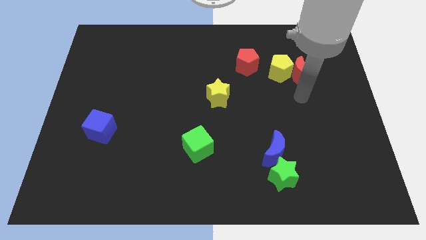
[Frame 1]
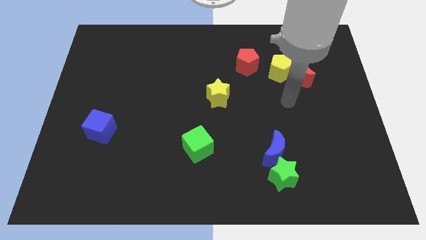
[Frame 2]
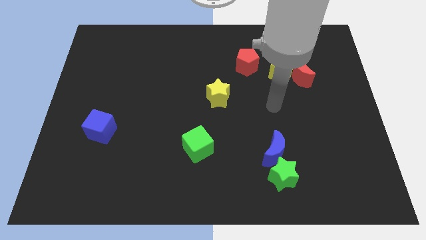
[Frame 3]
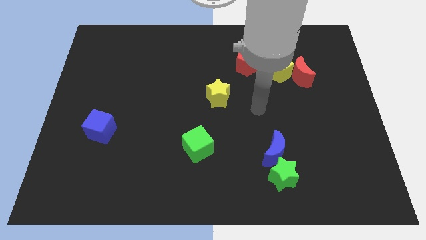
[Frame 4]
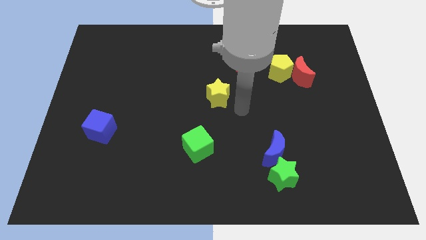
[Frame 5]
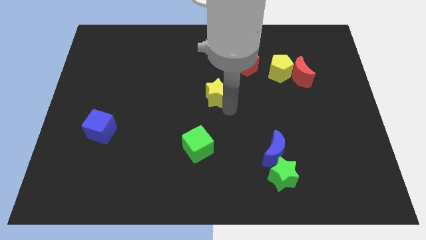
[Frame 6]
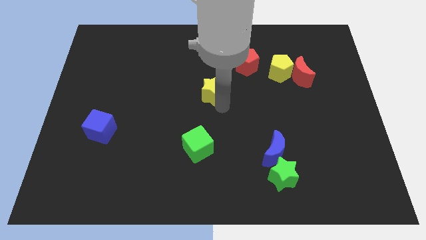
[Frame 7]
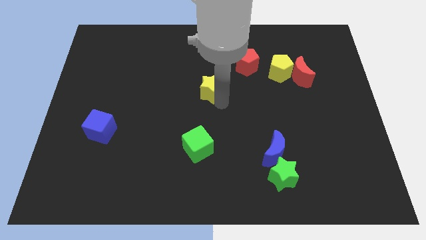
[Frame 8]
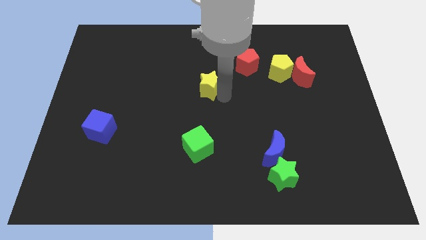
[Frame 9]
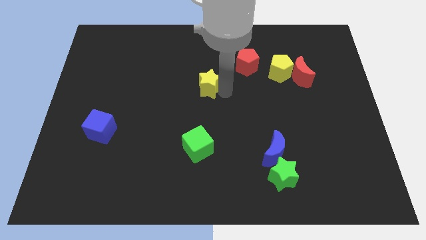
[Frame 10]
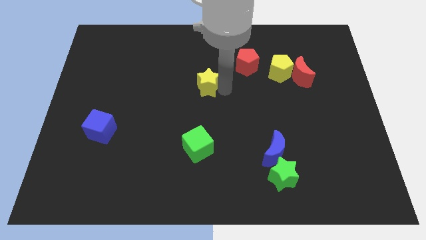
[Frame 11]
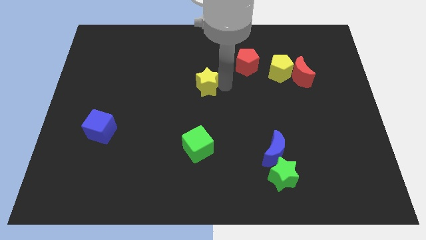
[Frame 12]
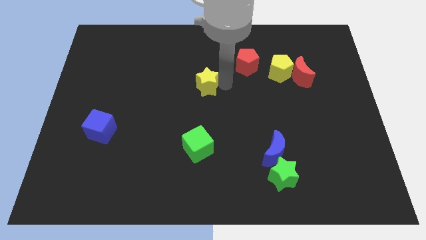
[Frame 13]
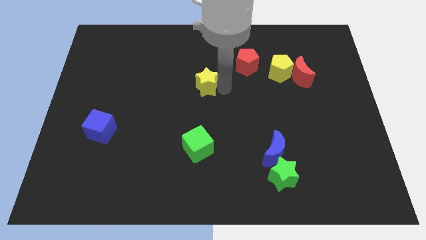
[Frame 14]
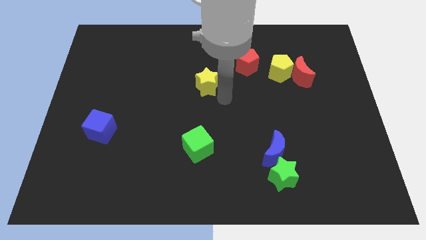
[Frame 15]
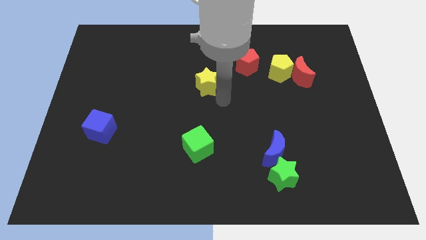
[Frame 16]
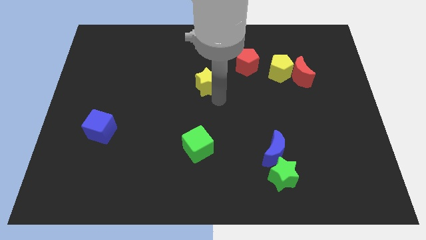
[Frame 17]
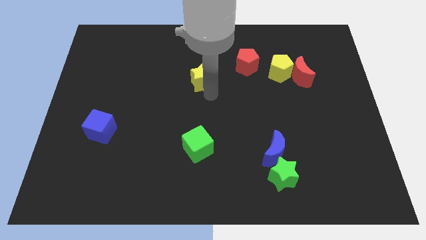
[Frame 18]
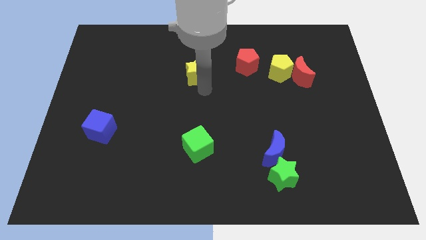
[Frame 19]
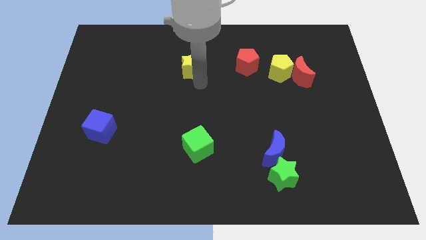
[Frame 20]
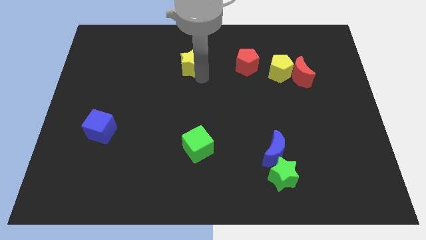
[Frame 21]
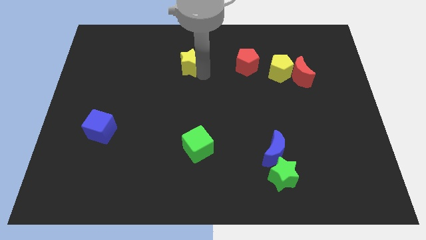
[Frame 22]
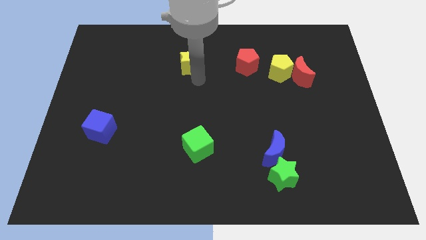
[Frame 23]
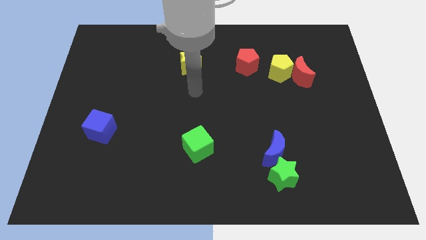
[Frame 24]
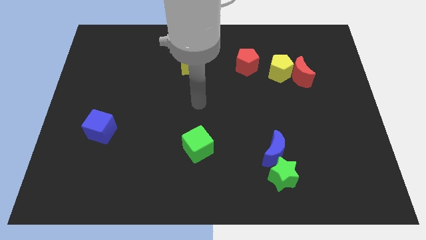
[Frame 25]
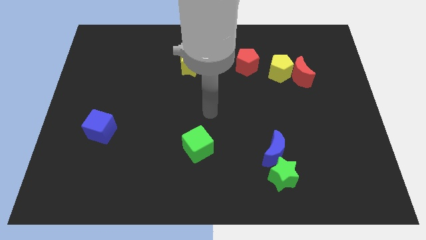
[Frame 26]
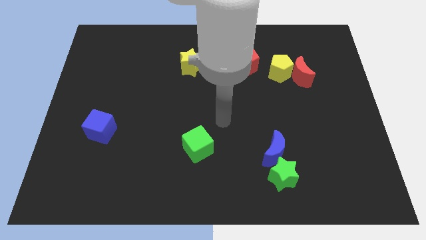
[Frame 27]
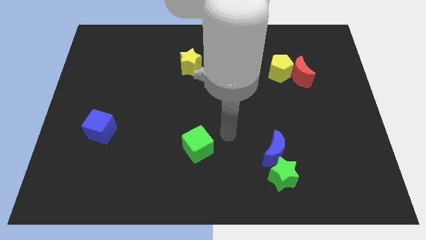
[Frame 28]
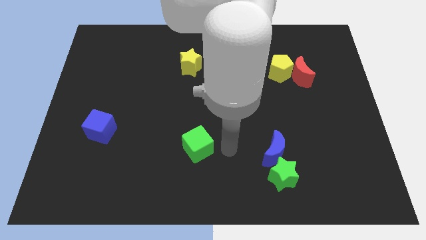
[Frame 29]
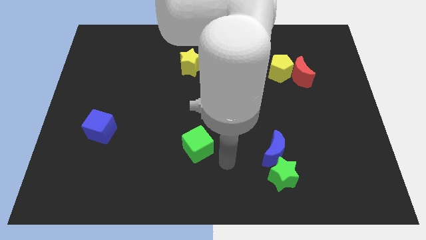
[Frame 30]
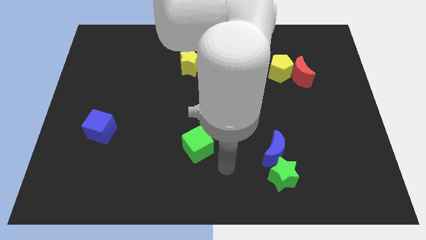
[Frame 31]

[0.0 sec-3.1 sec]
place the yellow star to the left of red pentagon

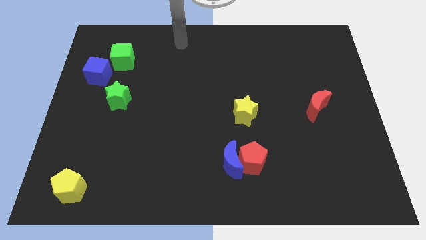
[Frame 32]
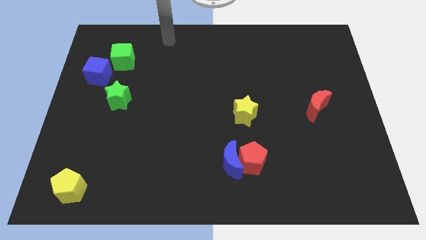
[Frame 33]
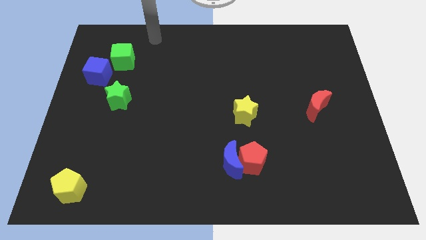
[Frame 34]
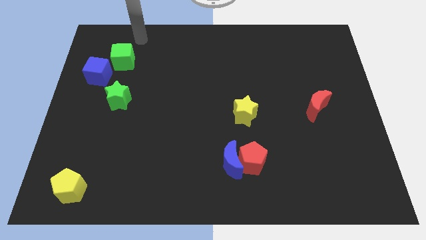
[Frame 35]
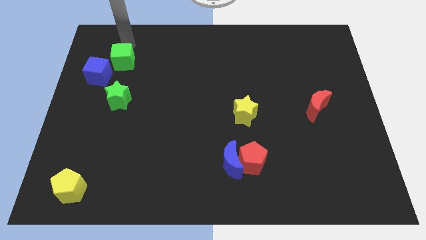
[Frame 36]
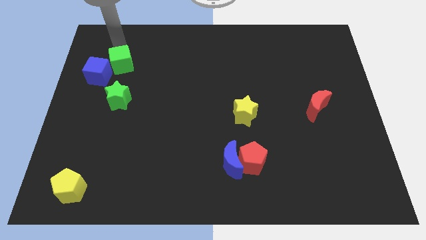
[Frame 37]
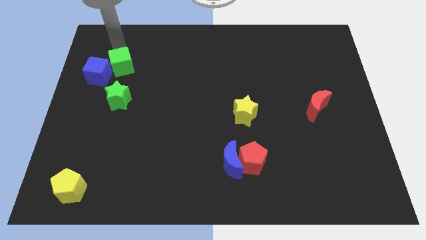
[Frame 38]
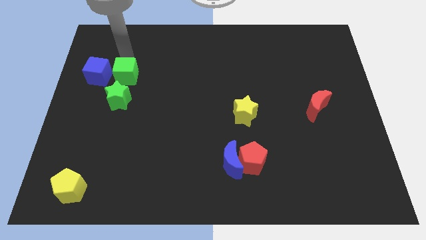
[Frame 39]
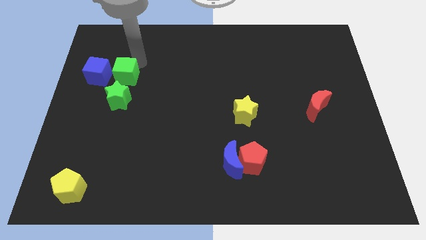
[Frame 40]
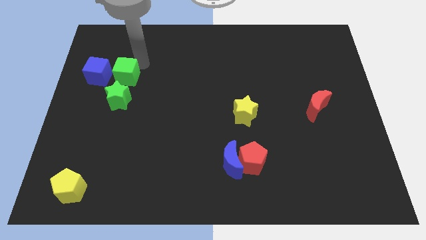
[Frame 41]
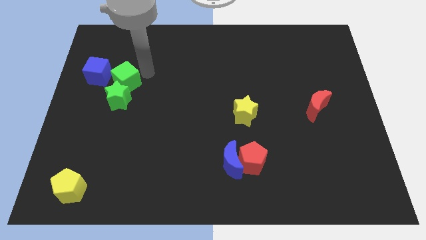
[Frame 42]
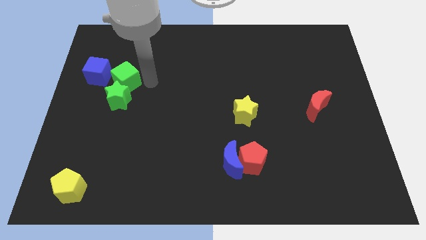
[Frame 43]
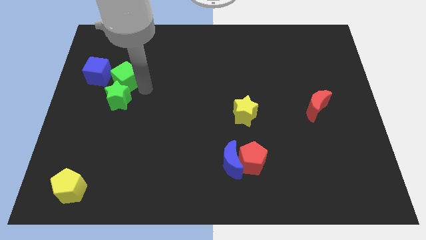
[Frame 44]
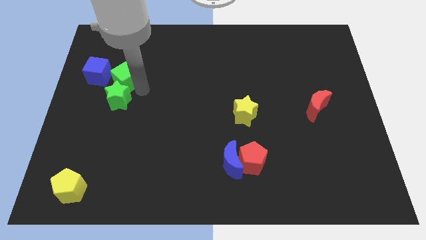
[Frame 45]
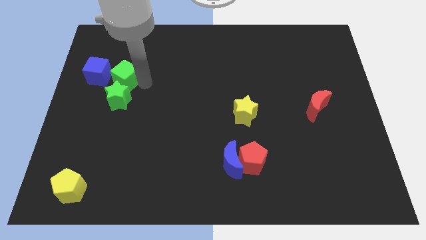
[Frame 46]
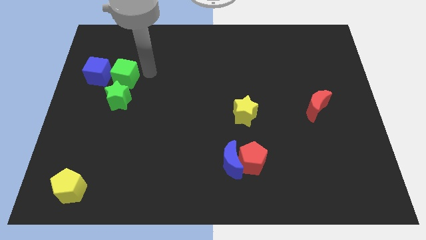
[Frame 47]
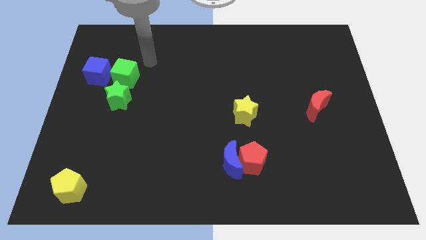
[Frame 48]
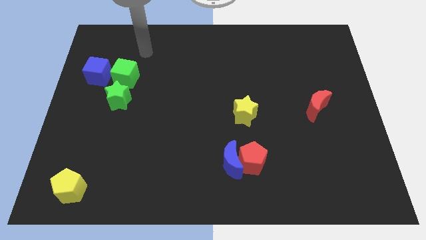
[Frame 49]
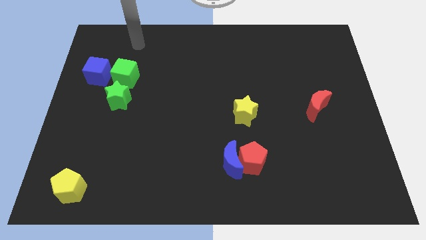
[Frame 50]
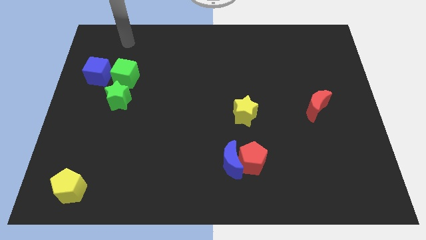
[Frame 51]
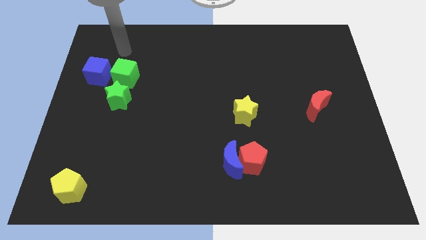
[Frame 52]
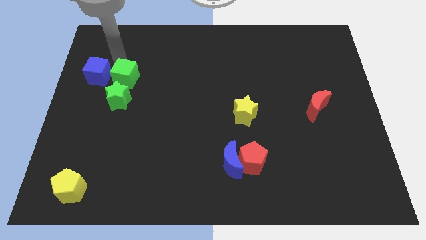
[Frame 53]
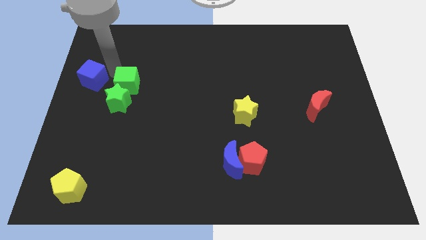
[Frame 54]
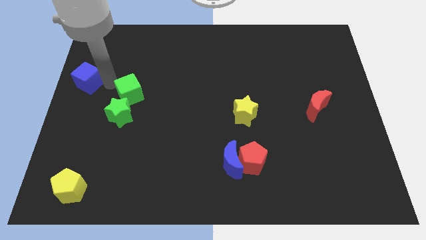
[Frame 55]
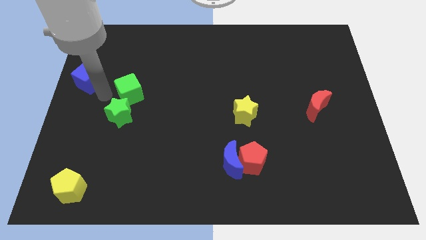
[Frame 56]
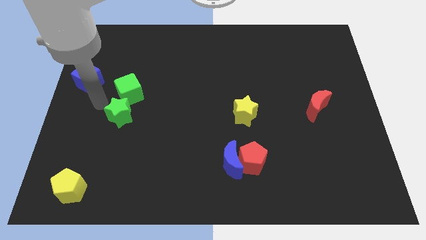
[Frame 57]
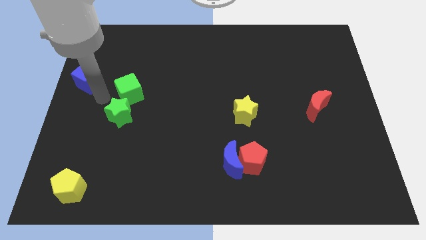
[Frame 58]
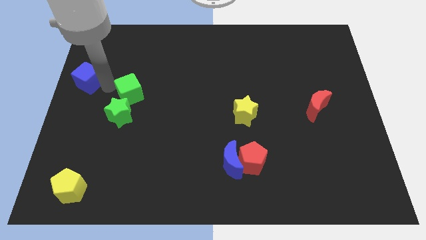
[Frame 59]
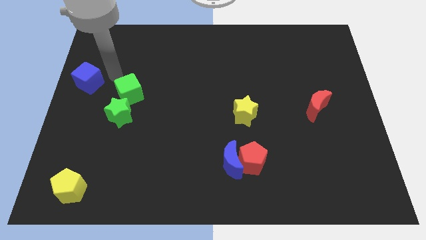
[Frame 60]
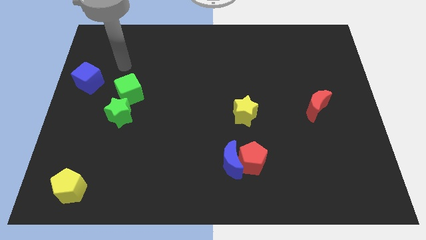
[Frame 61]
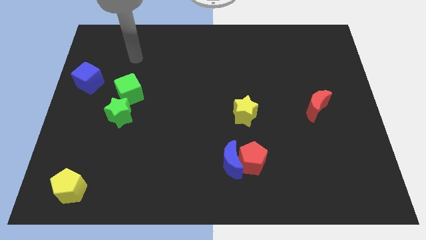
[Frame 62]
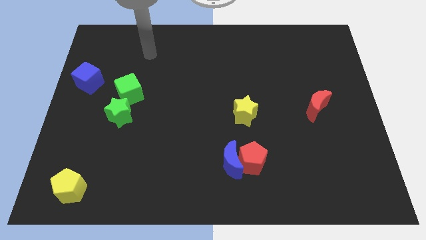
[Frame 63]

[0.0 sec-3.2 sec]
push the green blocks to the center left

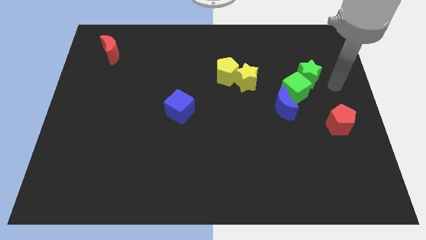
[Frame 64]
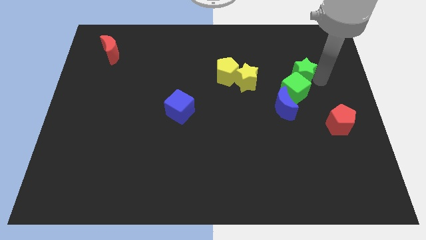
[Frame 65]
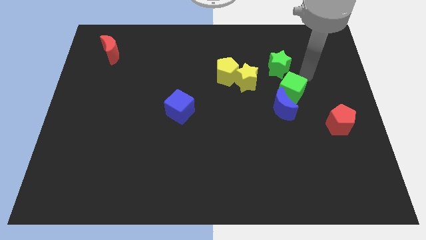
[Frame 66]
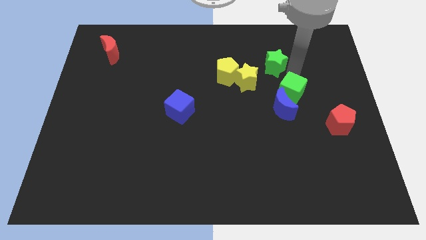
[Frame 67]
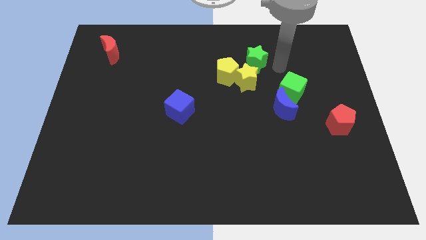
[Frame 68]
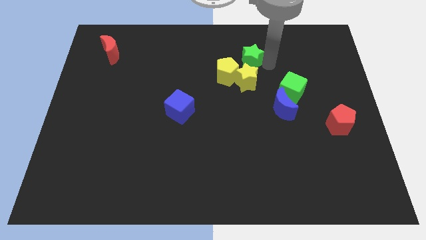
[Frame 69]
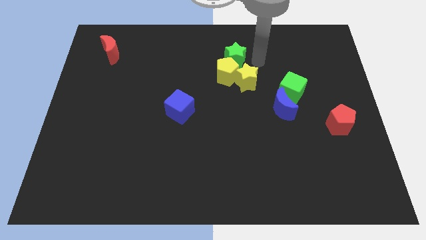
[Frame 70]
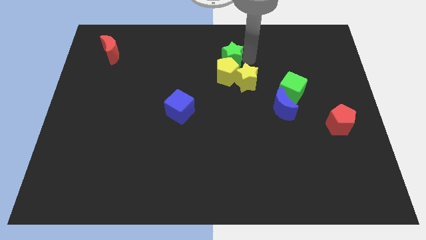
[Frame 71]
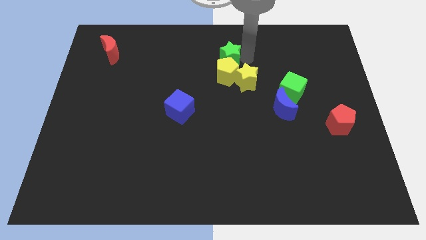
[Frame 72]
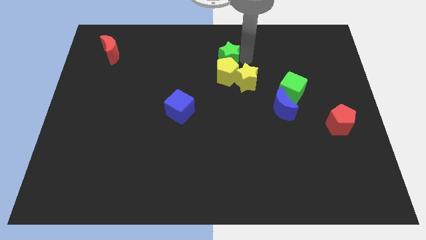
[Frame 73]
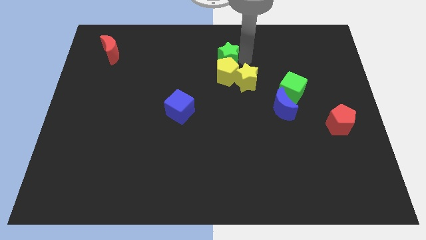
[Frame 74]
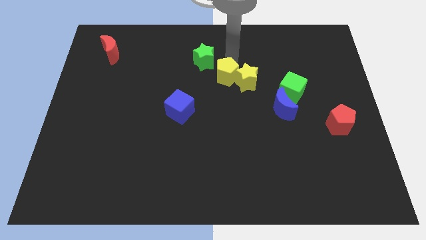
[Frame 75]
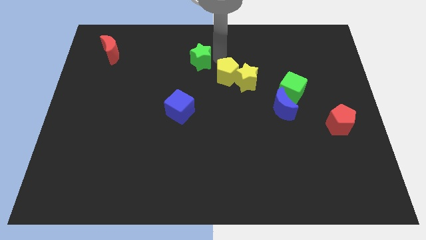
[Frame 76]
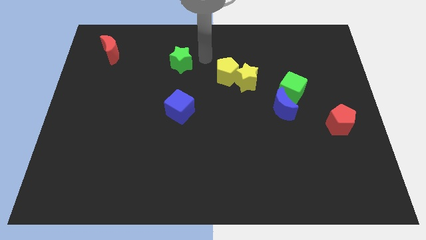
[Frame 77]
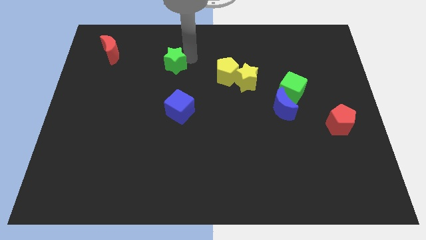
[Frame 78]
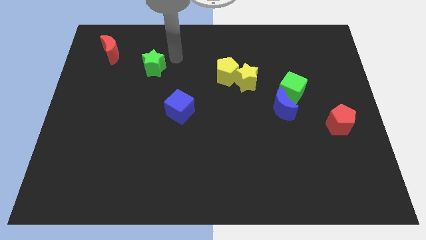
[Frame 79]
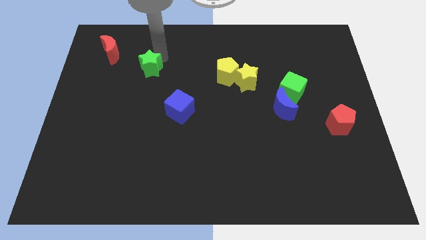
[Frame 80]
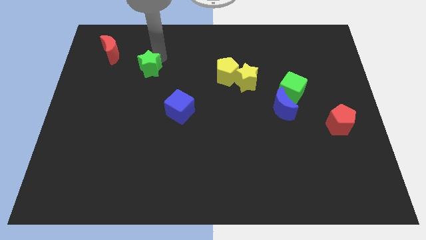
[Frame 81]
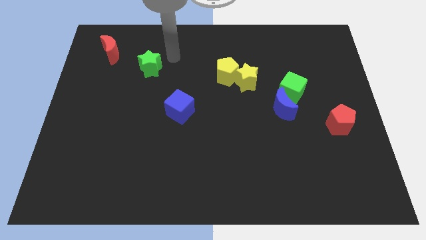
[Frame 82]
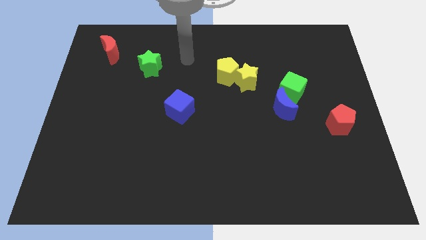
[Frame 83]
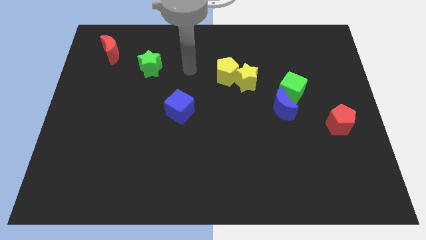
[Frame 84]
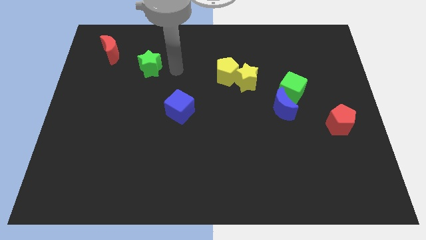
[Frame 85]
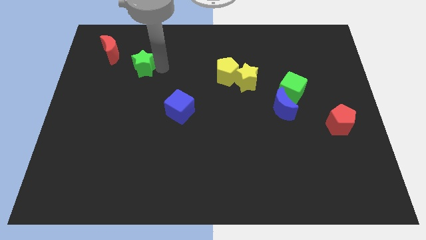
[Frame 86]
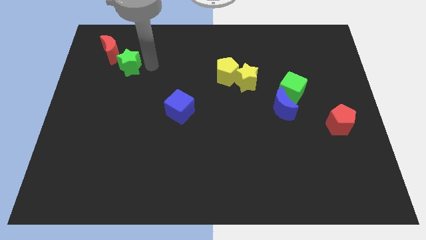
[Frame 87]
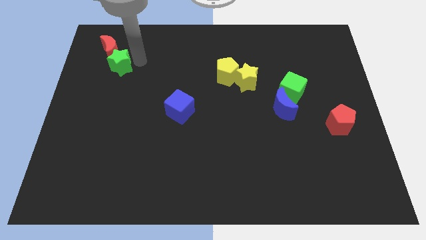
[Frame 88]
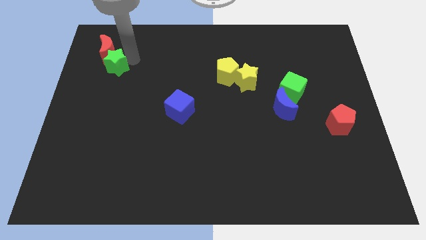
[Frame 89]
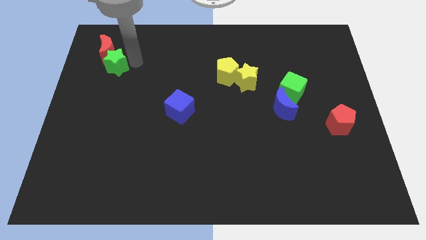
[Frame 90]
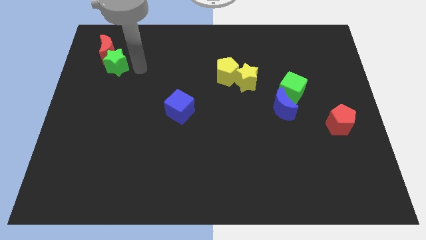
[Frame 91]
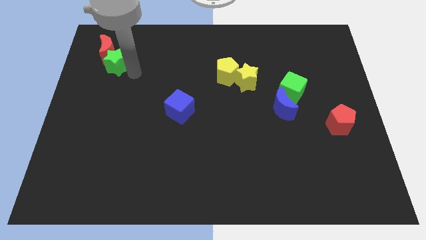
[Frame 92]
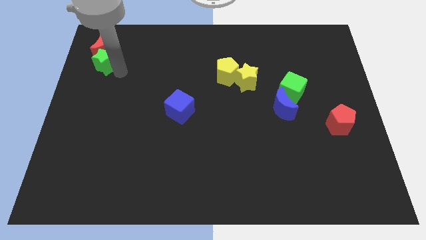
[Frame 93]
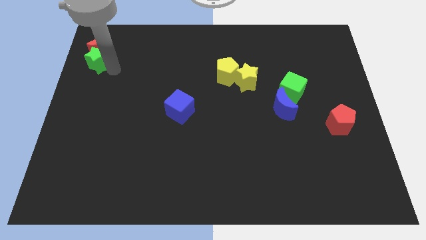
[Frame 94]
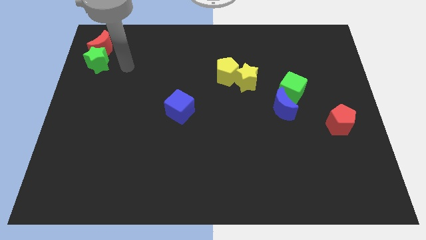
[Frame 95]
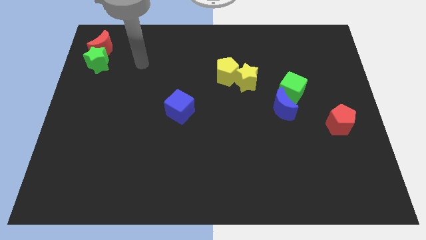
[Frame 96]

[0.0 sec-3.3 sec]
place the green star below the red moon
